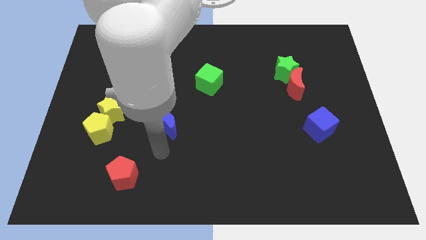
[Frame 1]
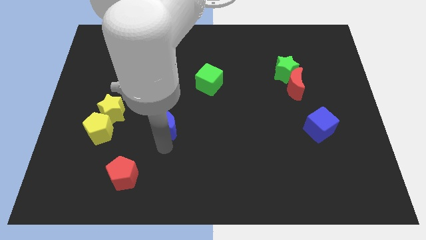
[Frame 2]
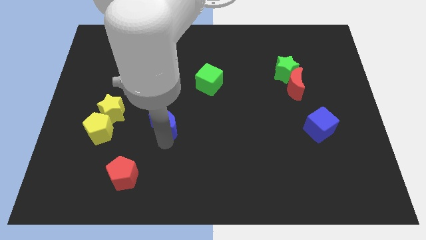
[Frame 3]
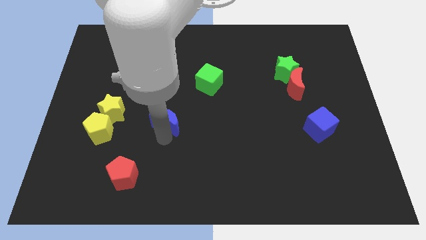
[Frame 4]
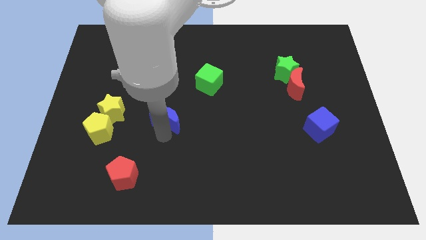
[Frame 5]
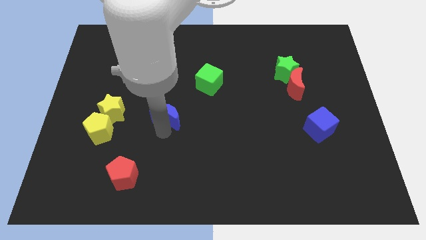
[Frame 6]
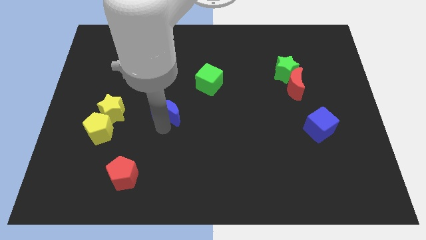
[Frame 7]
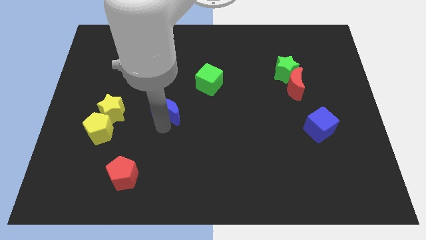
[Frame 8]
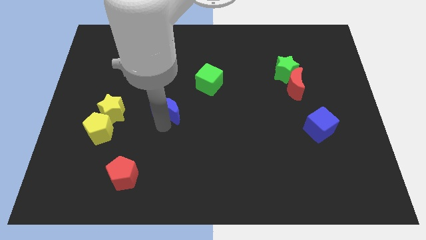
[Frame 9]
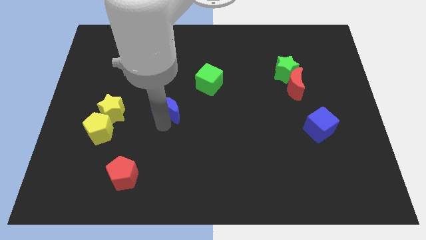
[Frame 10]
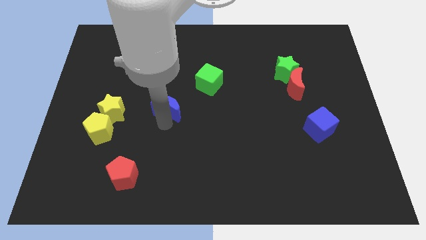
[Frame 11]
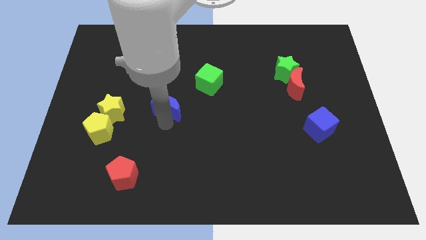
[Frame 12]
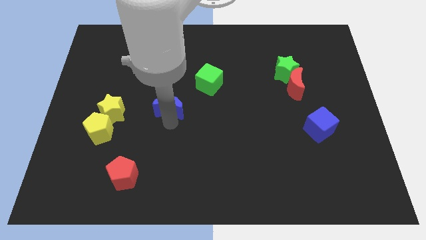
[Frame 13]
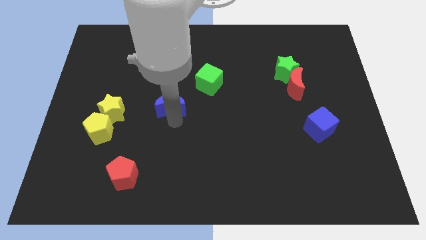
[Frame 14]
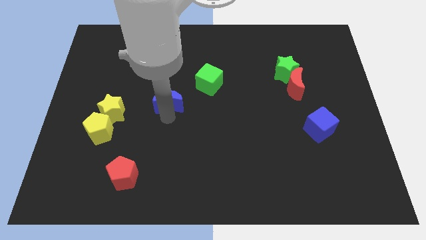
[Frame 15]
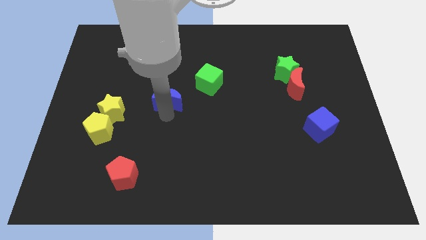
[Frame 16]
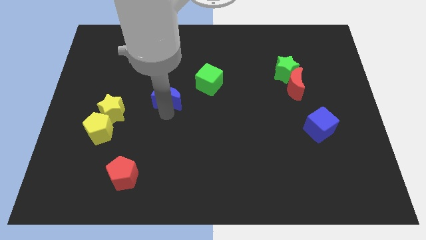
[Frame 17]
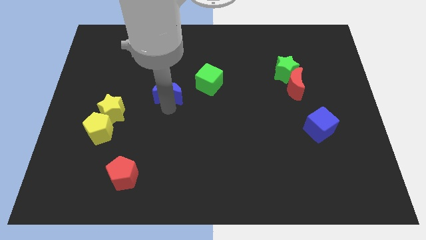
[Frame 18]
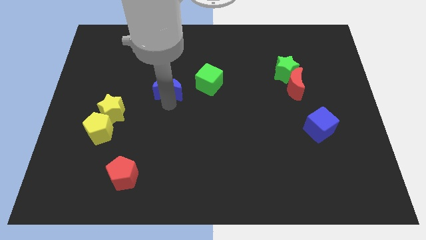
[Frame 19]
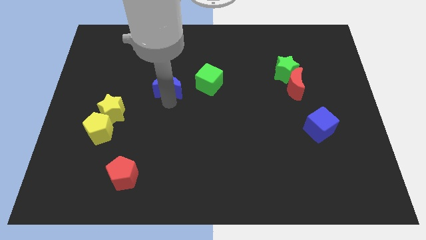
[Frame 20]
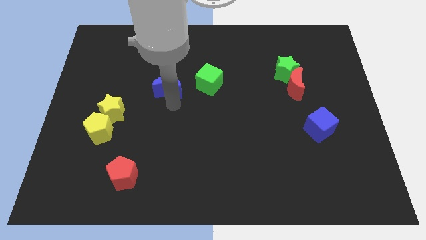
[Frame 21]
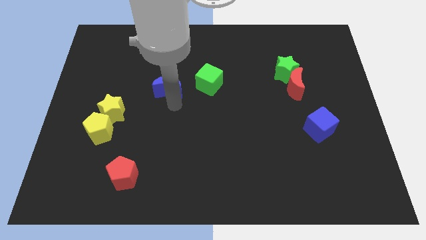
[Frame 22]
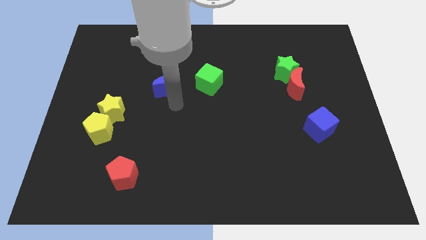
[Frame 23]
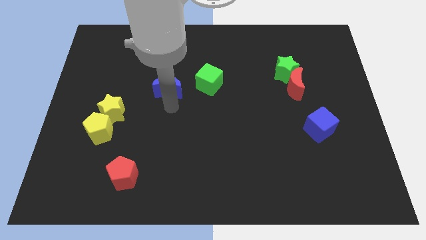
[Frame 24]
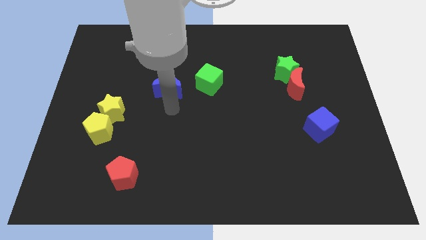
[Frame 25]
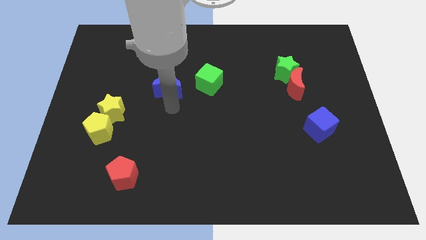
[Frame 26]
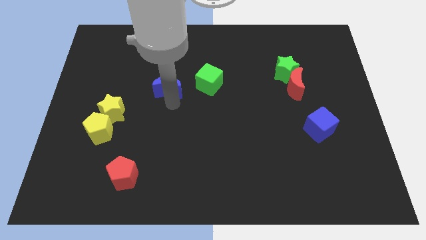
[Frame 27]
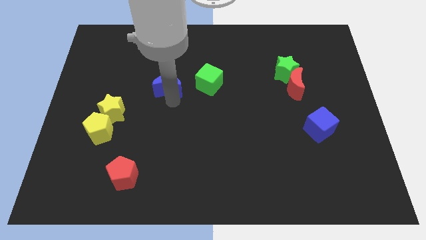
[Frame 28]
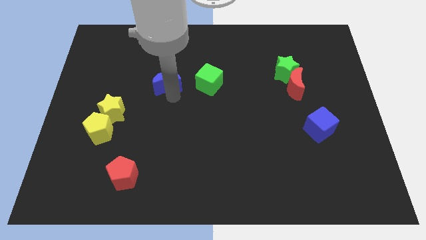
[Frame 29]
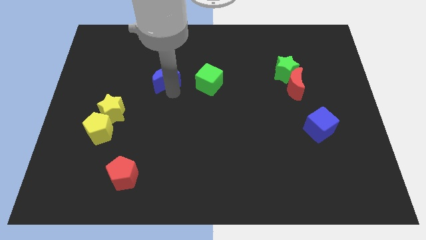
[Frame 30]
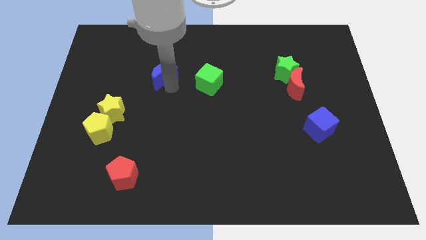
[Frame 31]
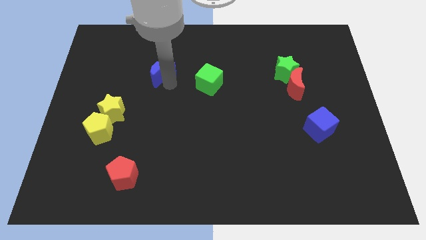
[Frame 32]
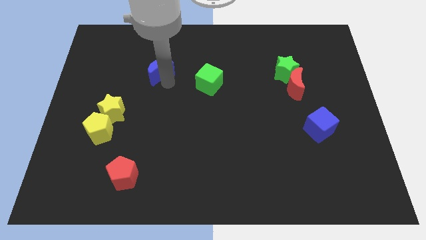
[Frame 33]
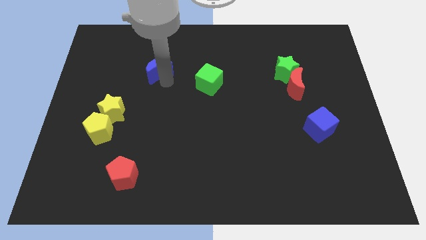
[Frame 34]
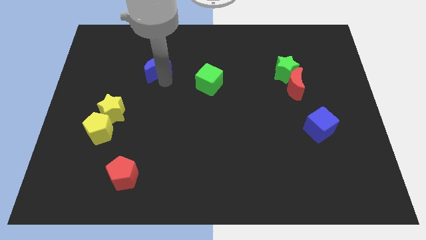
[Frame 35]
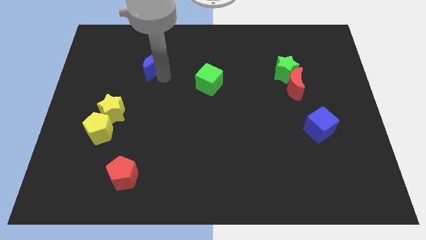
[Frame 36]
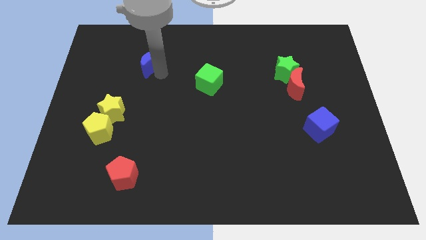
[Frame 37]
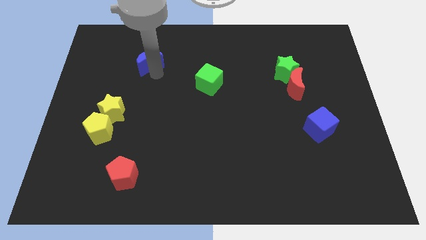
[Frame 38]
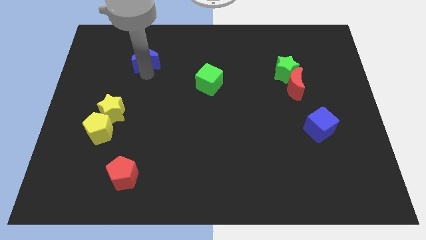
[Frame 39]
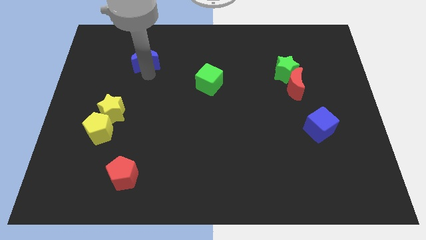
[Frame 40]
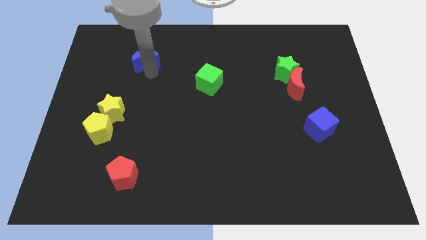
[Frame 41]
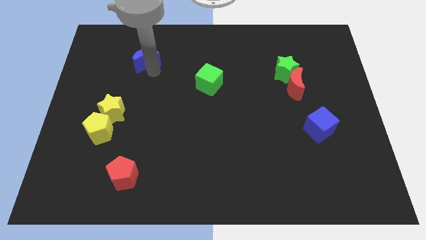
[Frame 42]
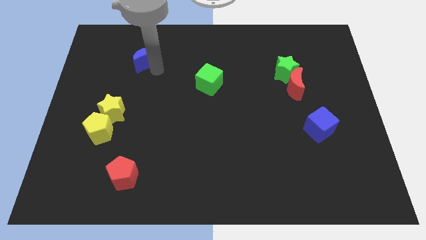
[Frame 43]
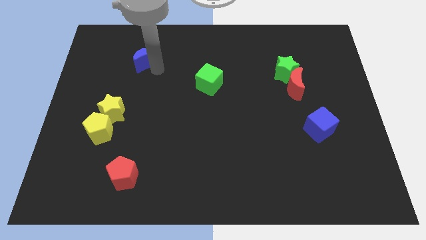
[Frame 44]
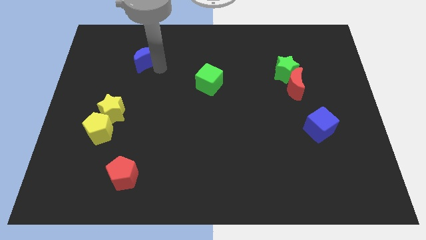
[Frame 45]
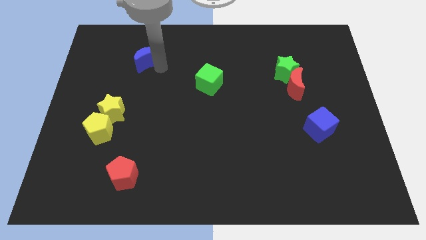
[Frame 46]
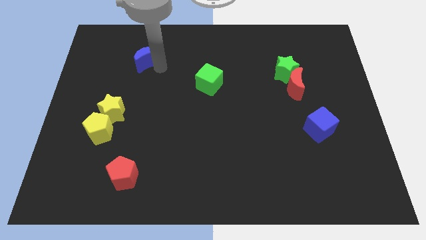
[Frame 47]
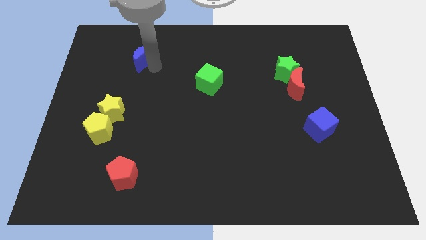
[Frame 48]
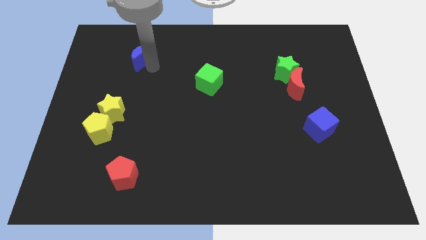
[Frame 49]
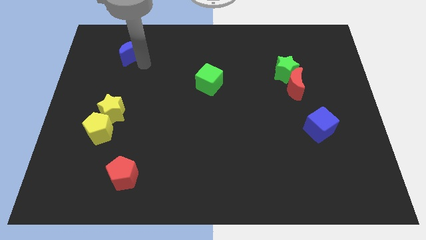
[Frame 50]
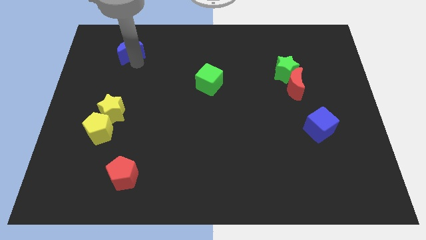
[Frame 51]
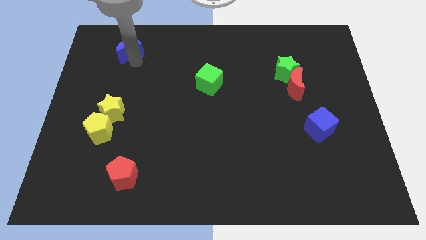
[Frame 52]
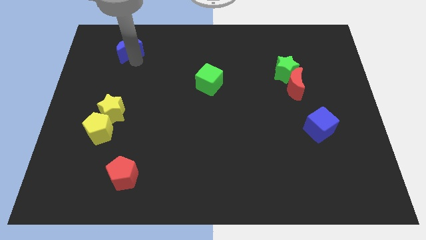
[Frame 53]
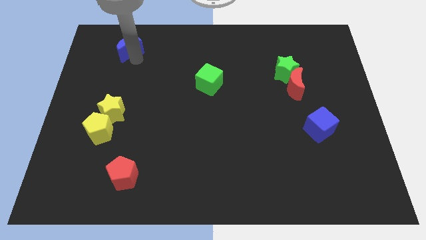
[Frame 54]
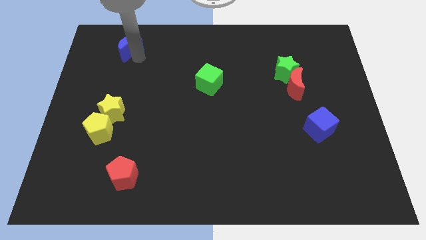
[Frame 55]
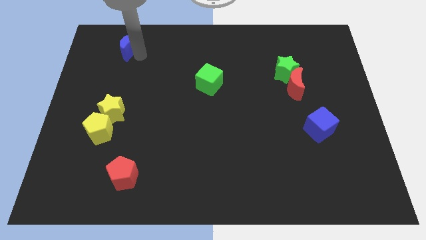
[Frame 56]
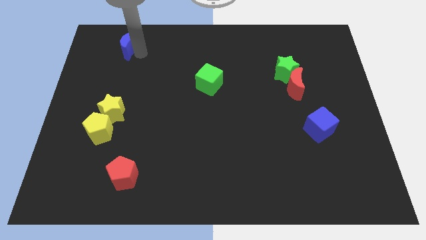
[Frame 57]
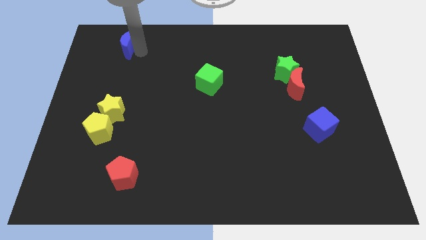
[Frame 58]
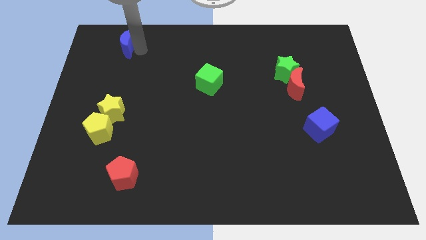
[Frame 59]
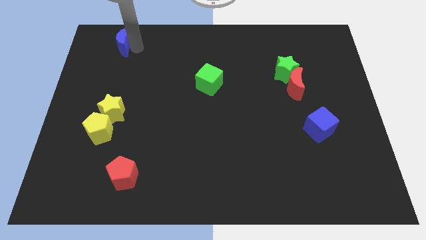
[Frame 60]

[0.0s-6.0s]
push the blue moon above the yellow star

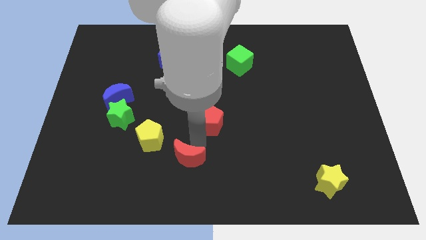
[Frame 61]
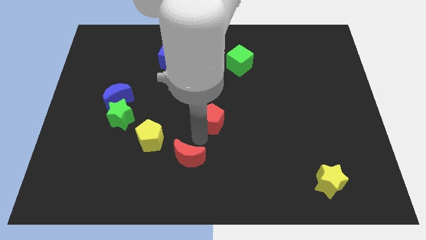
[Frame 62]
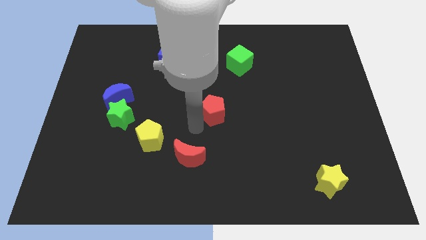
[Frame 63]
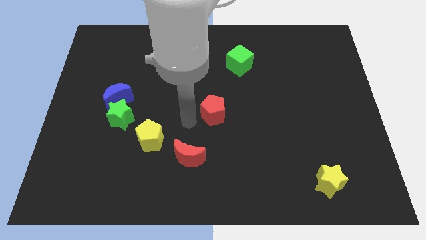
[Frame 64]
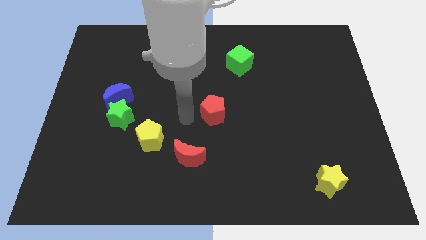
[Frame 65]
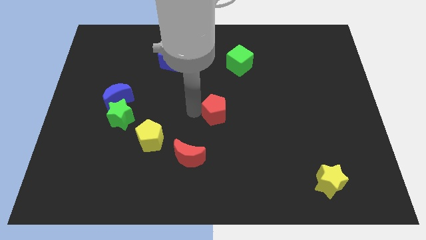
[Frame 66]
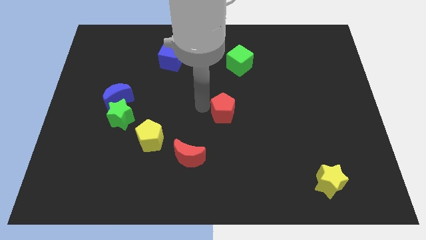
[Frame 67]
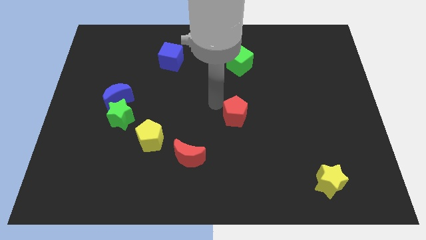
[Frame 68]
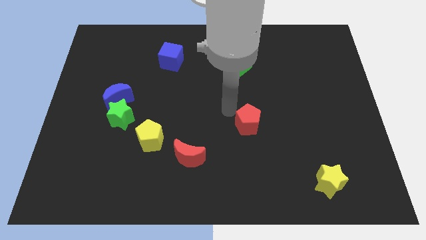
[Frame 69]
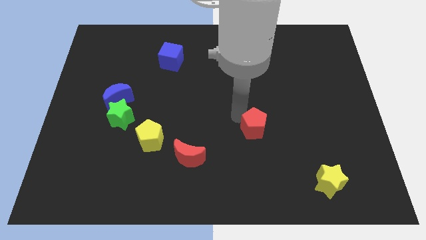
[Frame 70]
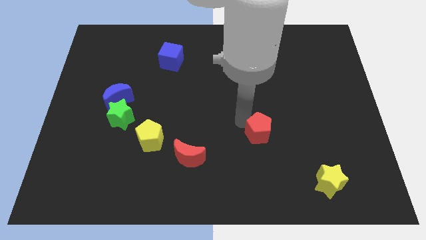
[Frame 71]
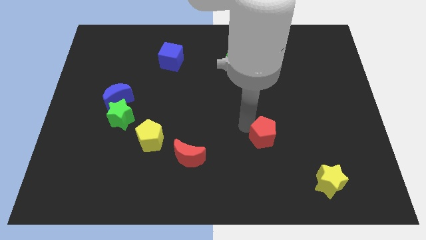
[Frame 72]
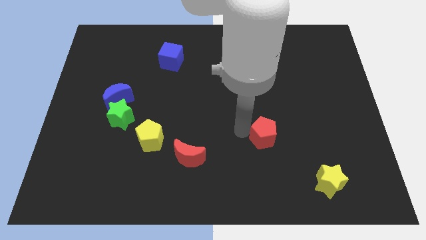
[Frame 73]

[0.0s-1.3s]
place the red pentagon diagonal to the yellow star

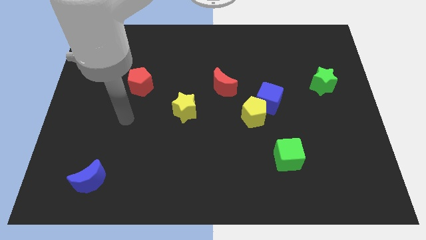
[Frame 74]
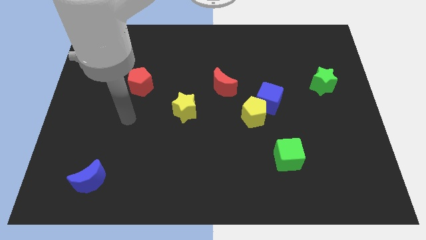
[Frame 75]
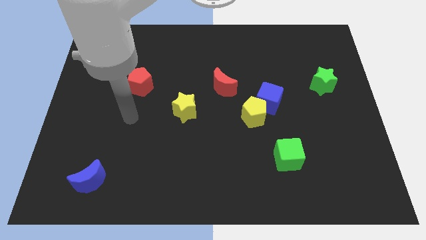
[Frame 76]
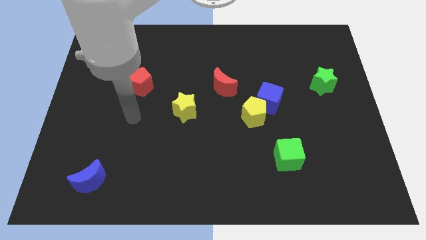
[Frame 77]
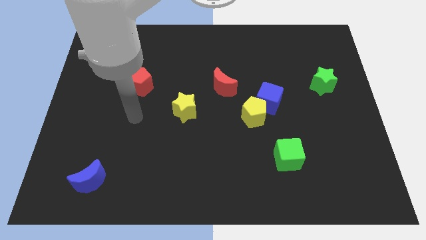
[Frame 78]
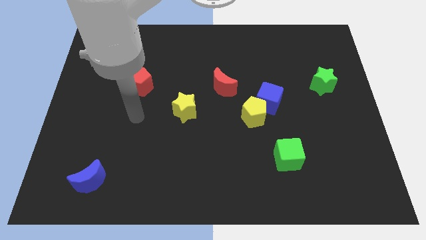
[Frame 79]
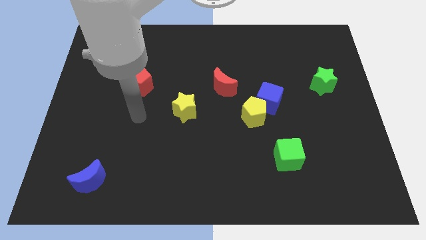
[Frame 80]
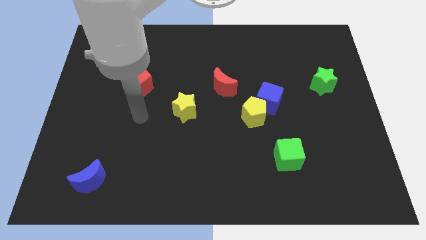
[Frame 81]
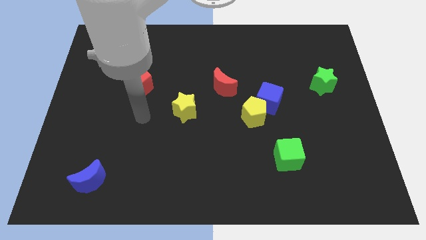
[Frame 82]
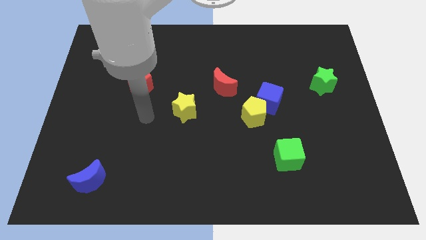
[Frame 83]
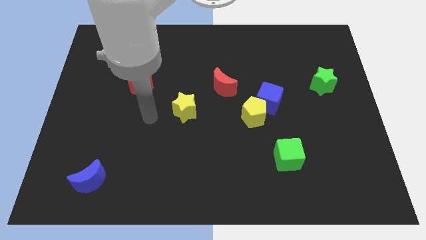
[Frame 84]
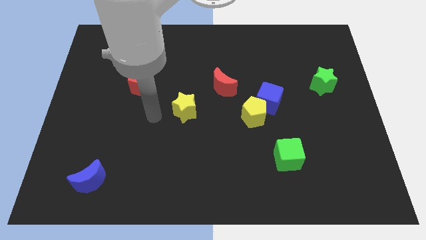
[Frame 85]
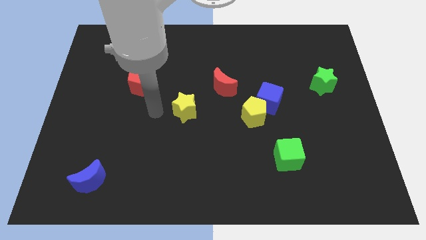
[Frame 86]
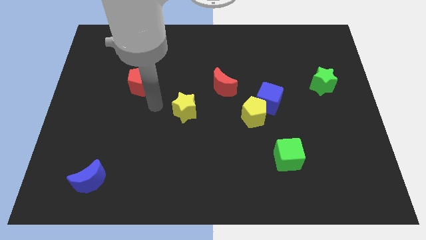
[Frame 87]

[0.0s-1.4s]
point your arm at the left of the yellow star
